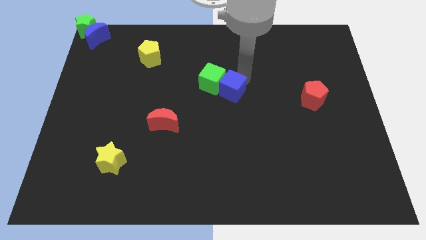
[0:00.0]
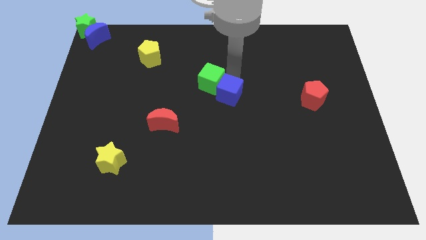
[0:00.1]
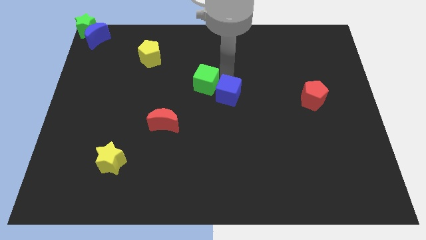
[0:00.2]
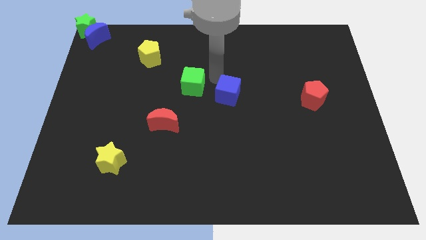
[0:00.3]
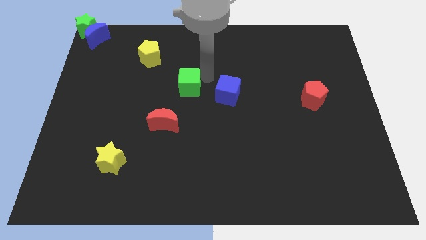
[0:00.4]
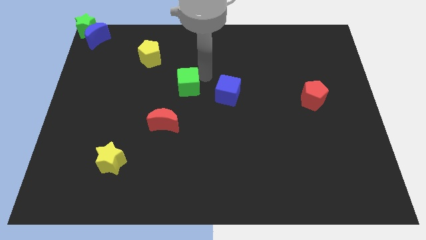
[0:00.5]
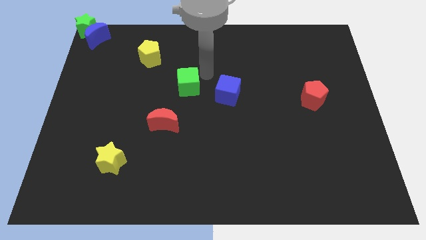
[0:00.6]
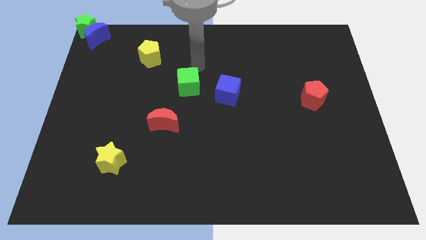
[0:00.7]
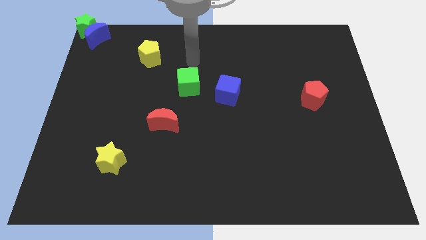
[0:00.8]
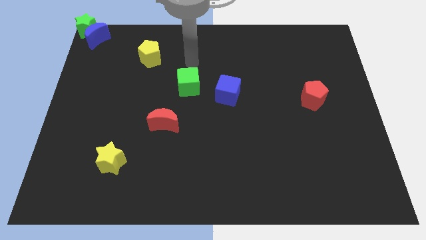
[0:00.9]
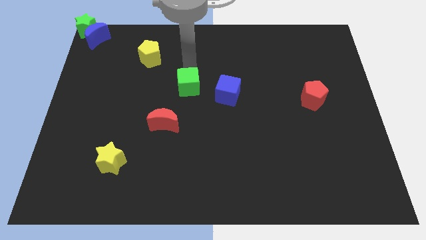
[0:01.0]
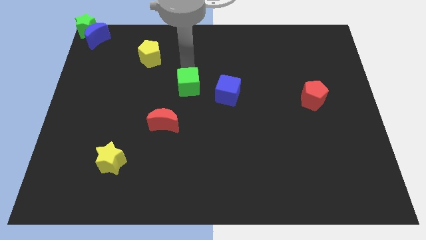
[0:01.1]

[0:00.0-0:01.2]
separate the green cube from the blue cube

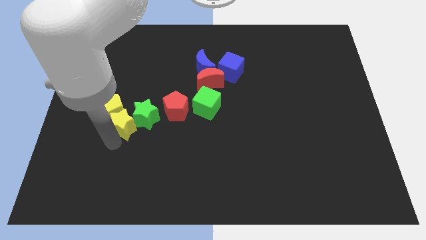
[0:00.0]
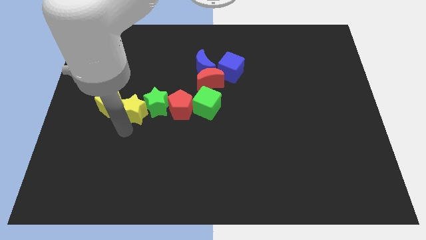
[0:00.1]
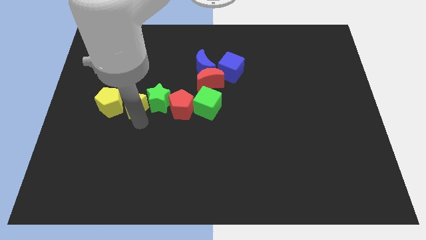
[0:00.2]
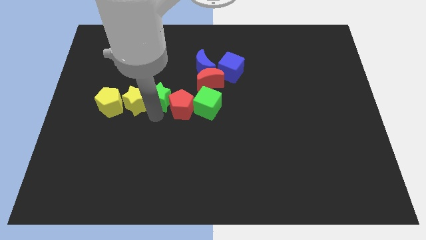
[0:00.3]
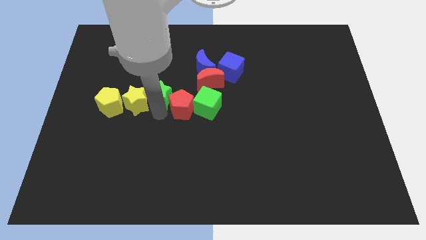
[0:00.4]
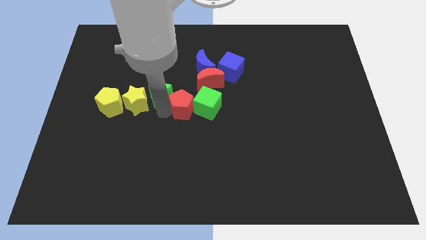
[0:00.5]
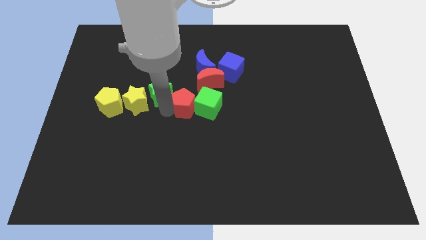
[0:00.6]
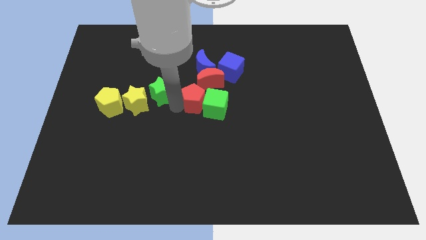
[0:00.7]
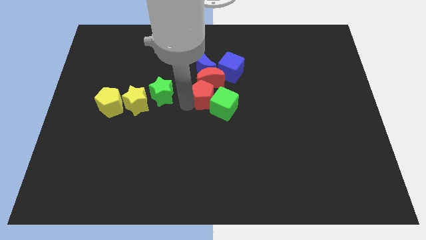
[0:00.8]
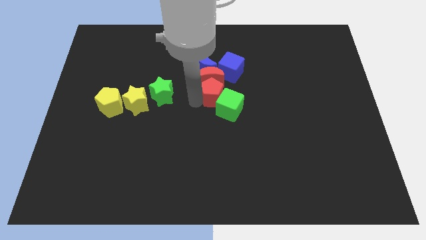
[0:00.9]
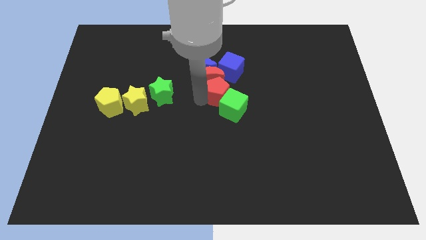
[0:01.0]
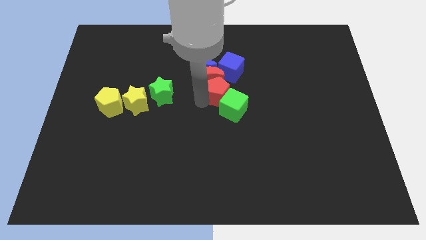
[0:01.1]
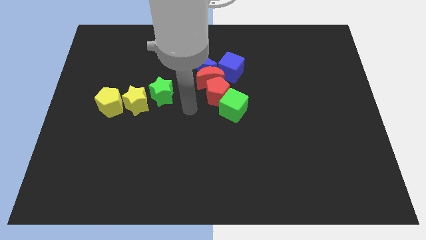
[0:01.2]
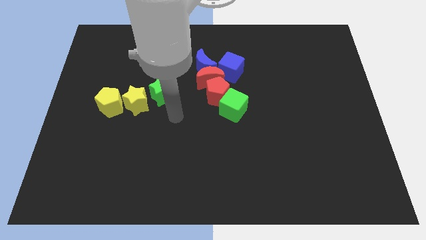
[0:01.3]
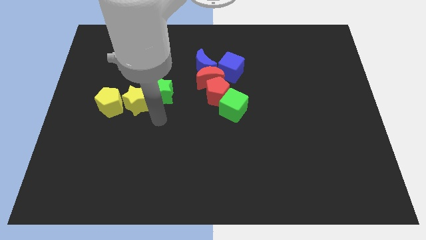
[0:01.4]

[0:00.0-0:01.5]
move the yellow star in between yellow pentagon and green star

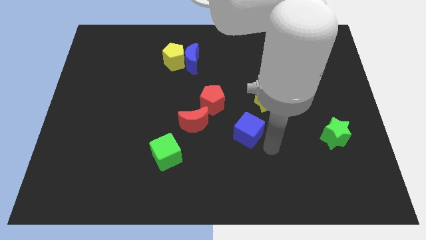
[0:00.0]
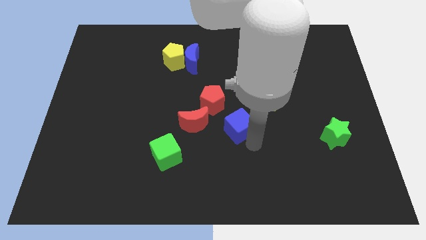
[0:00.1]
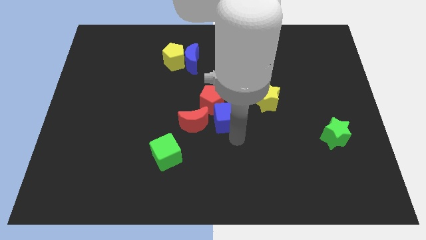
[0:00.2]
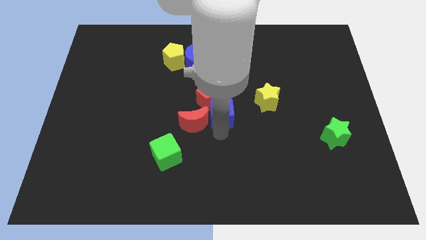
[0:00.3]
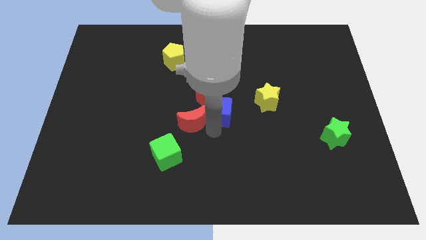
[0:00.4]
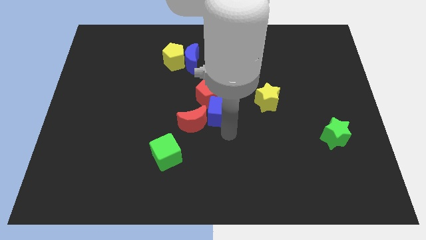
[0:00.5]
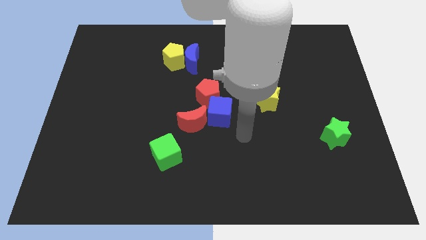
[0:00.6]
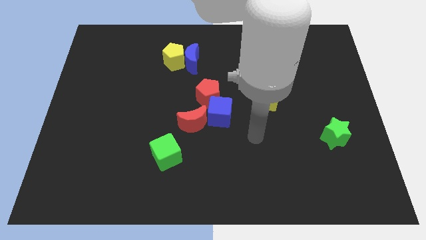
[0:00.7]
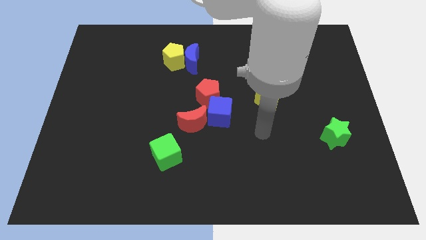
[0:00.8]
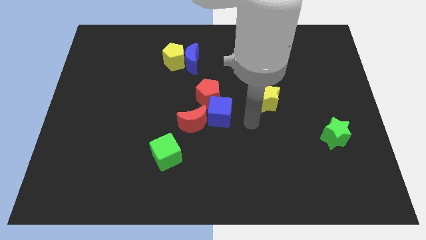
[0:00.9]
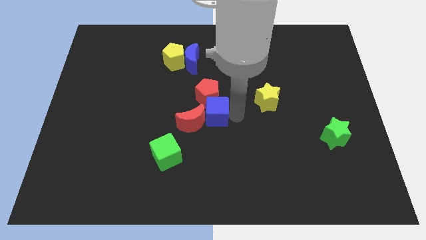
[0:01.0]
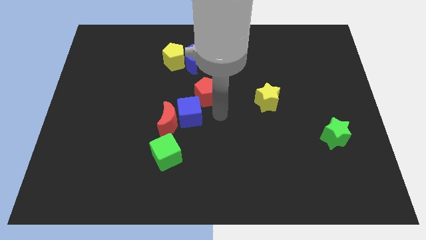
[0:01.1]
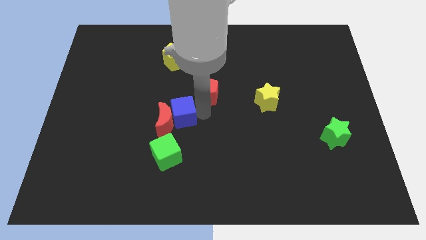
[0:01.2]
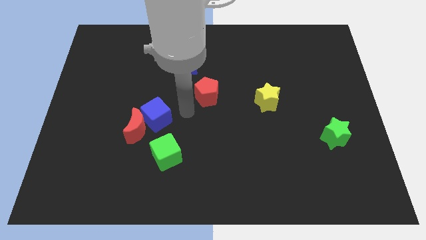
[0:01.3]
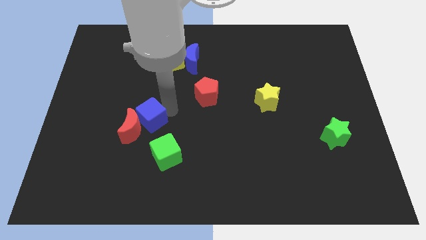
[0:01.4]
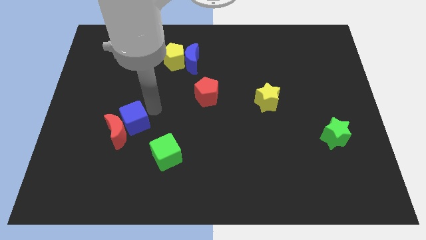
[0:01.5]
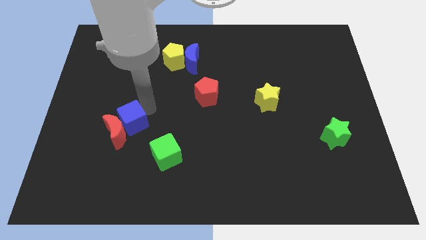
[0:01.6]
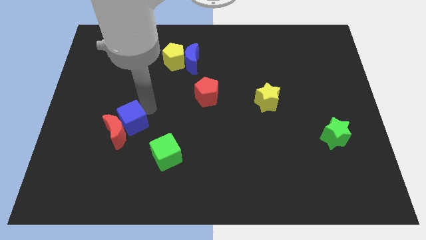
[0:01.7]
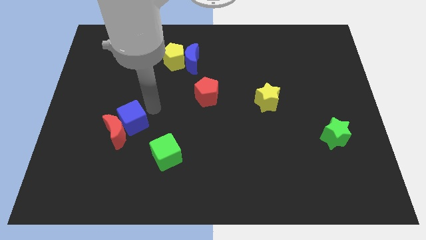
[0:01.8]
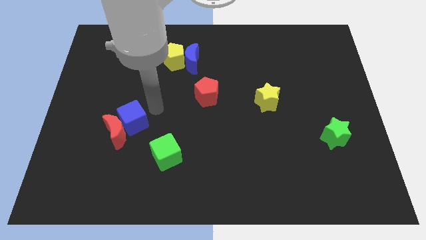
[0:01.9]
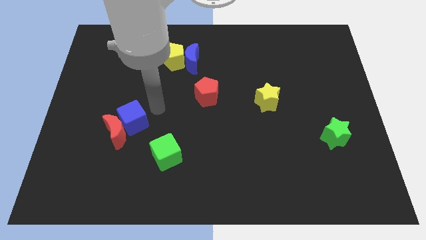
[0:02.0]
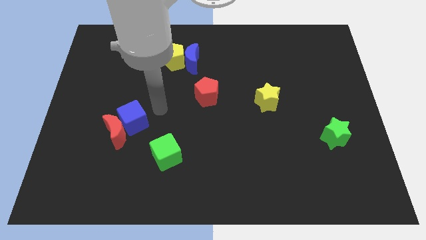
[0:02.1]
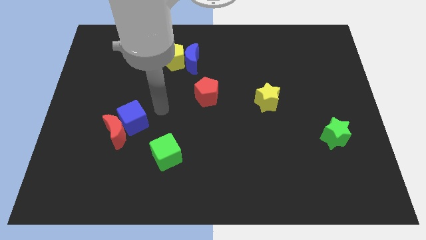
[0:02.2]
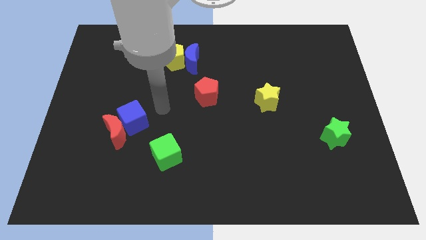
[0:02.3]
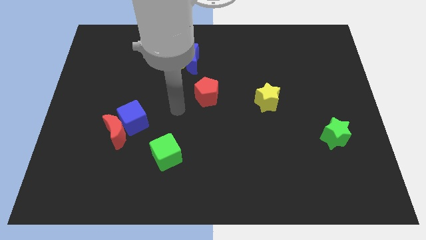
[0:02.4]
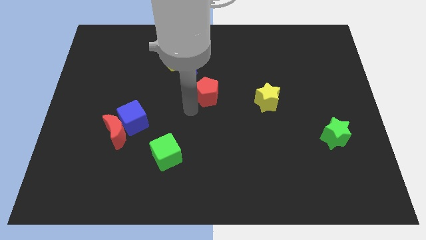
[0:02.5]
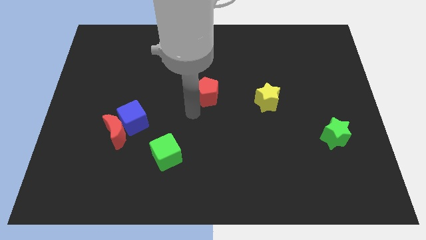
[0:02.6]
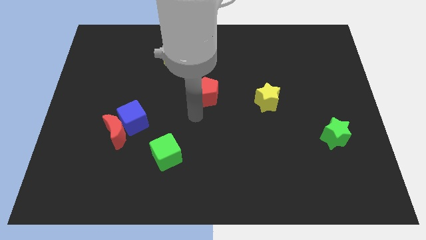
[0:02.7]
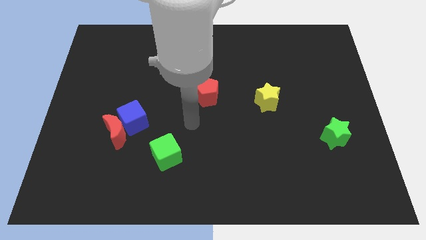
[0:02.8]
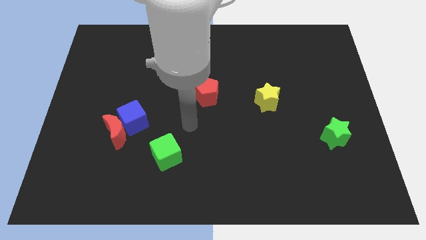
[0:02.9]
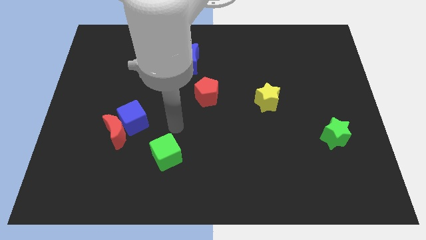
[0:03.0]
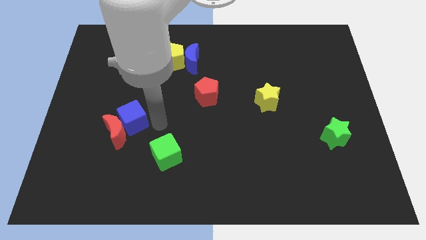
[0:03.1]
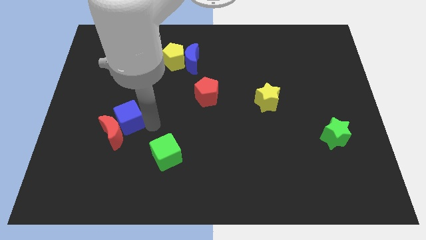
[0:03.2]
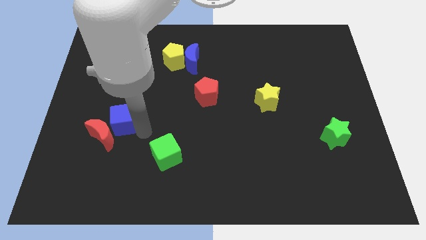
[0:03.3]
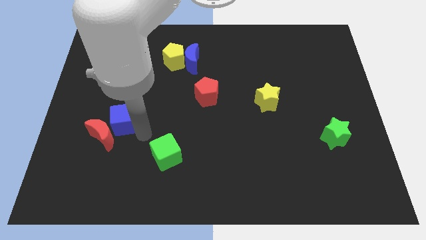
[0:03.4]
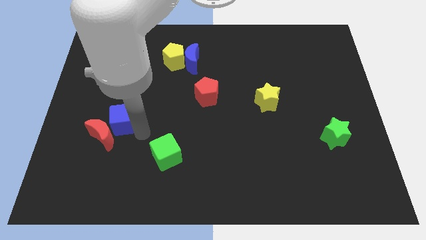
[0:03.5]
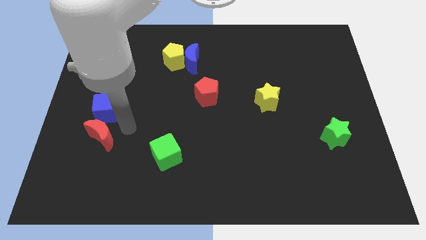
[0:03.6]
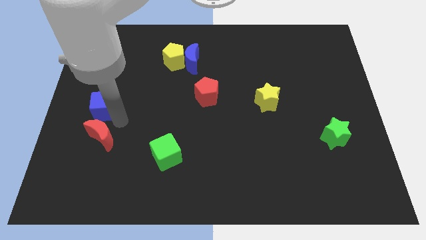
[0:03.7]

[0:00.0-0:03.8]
move the blue cube and red moon to center left

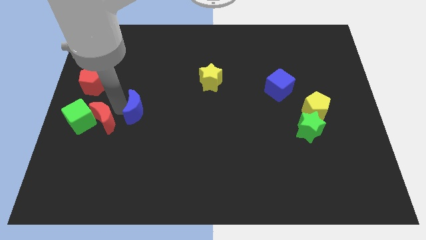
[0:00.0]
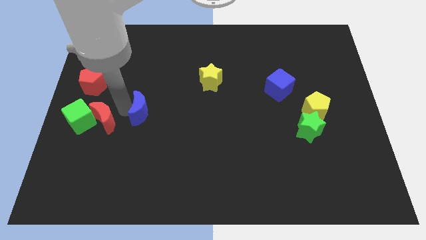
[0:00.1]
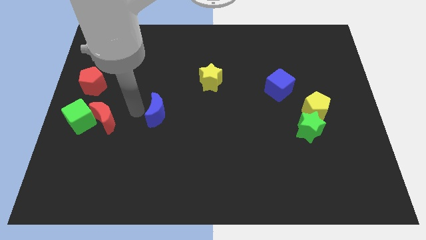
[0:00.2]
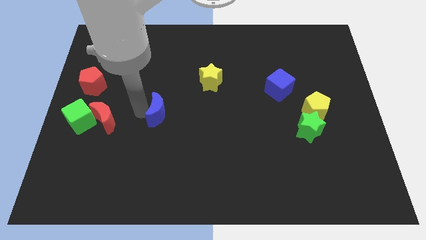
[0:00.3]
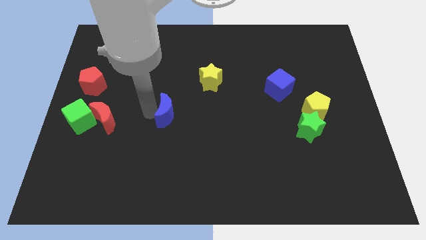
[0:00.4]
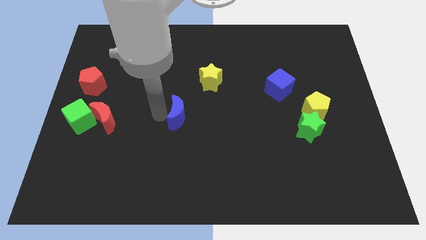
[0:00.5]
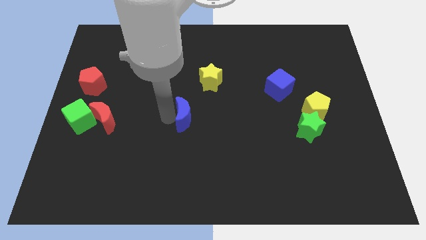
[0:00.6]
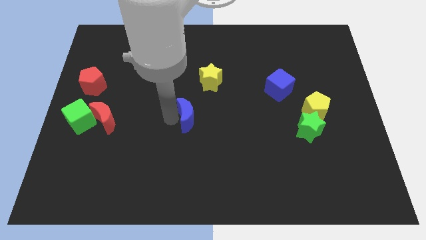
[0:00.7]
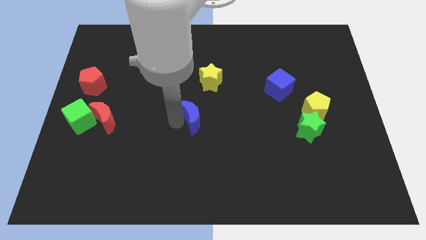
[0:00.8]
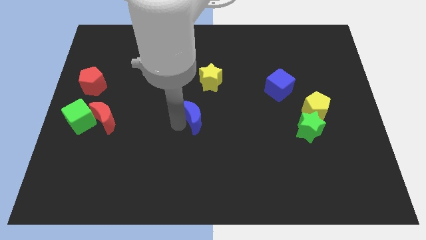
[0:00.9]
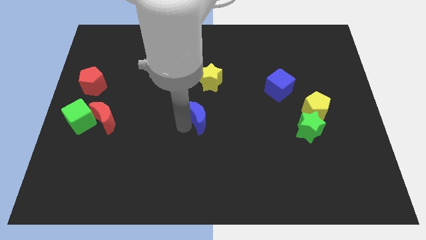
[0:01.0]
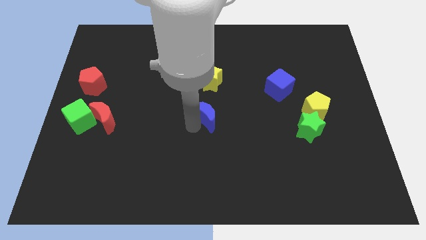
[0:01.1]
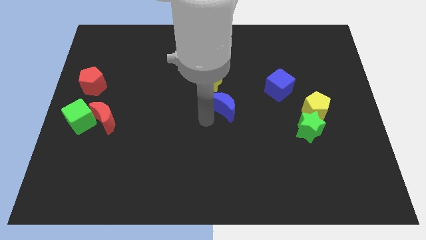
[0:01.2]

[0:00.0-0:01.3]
push the blue crescent to the bottom of the yellow star

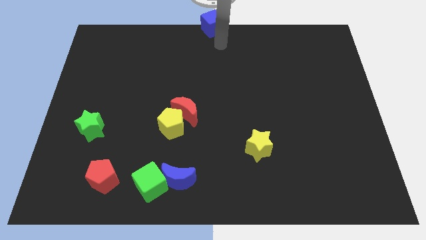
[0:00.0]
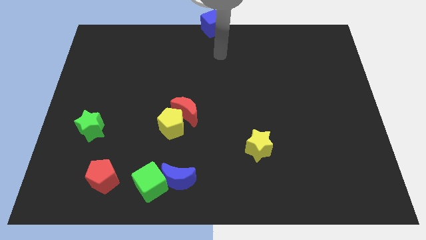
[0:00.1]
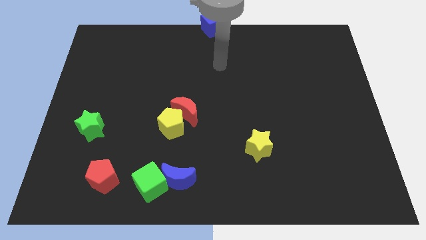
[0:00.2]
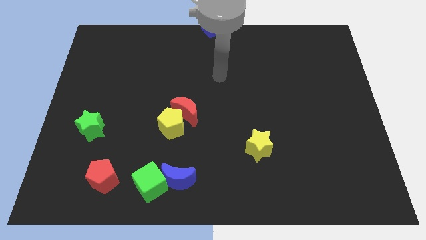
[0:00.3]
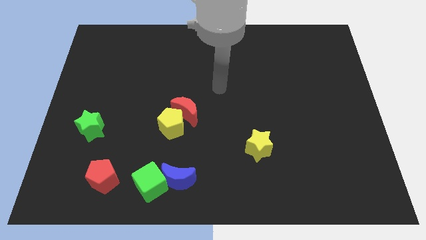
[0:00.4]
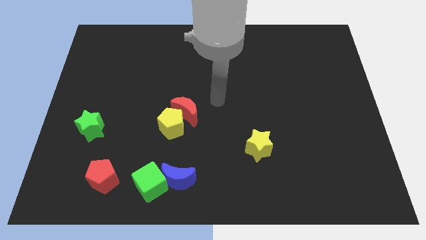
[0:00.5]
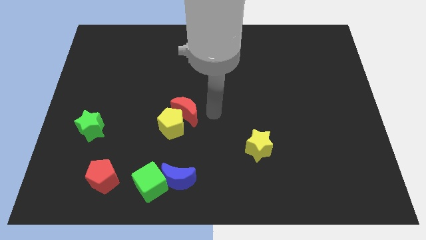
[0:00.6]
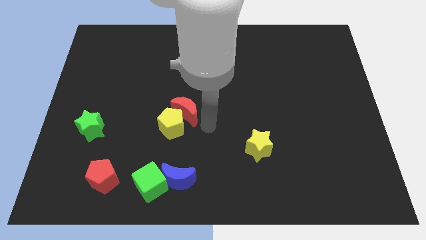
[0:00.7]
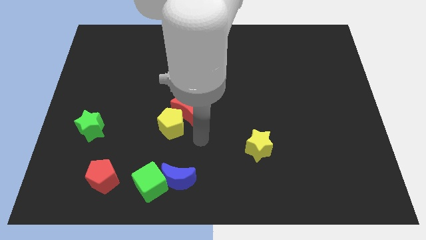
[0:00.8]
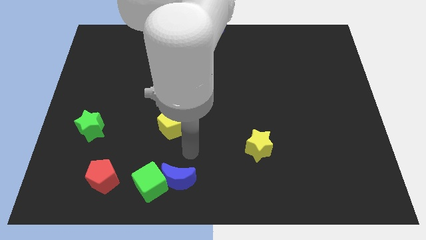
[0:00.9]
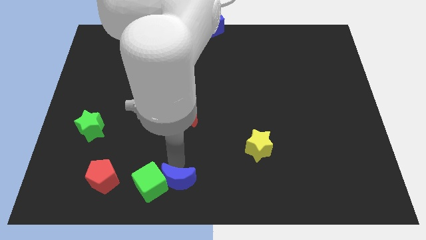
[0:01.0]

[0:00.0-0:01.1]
move your arm towards blue crescent
